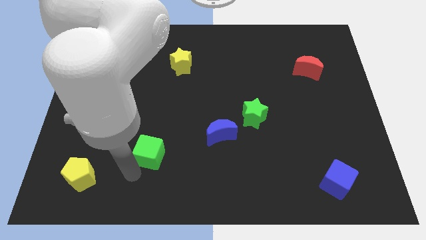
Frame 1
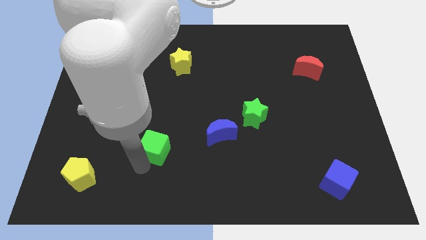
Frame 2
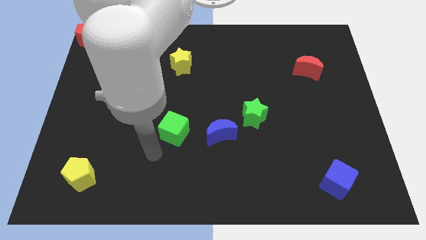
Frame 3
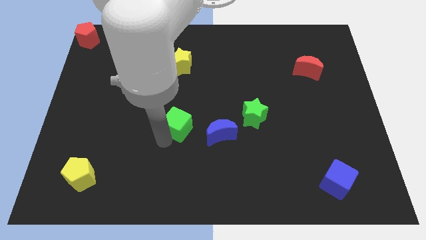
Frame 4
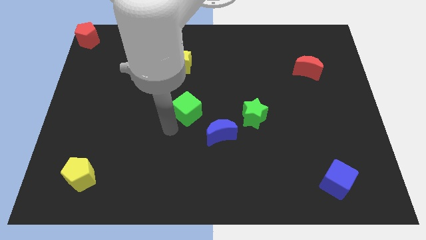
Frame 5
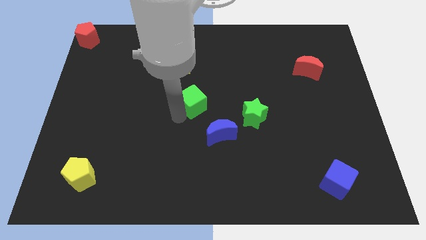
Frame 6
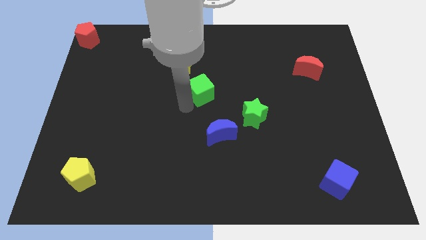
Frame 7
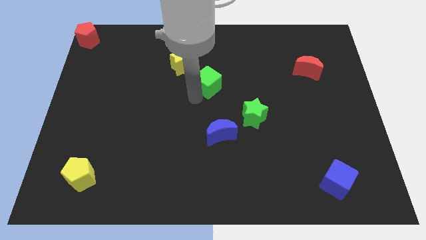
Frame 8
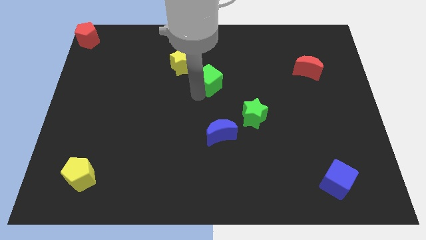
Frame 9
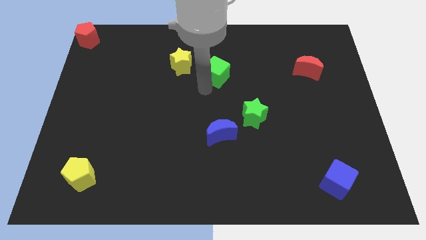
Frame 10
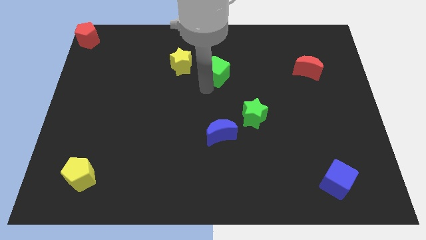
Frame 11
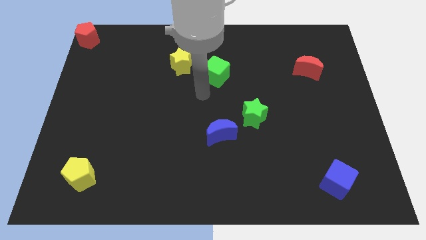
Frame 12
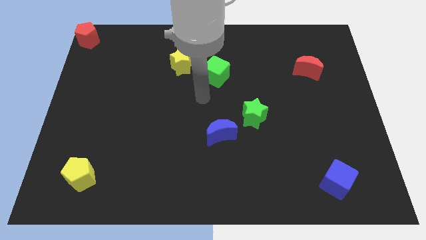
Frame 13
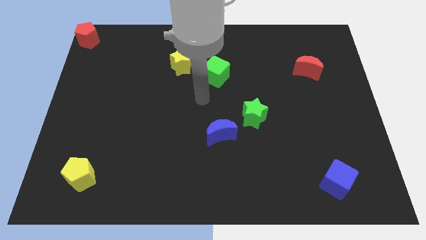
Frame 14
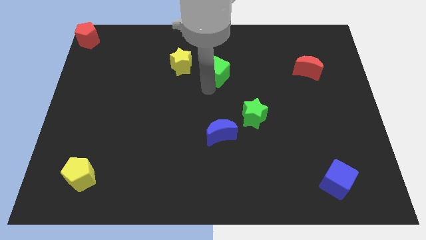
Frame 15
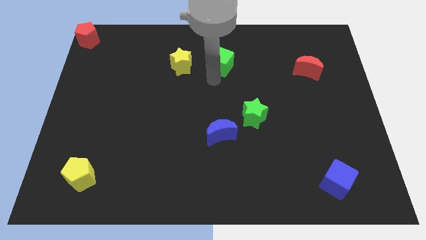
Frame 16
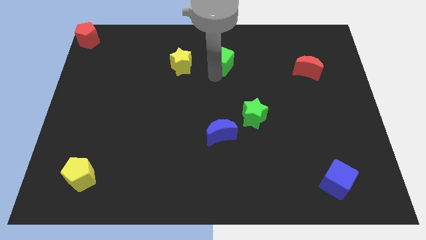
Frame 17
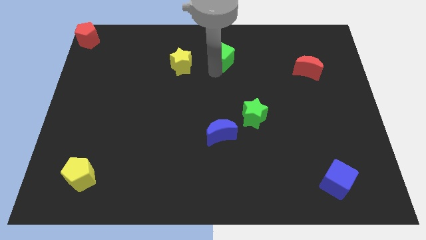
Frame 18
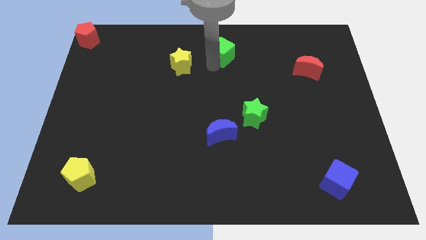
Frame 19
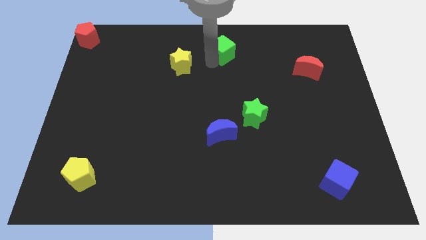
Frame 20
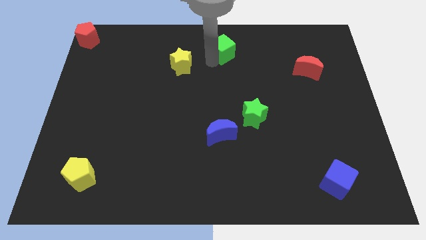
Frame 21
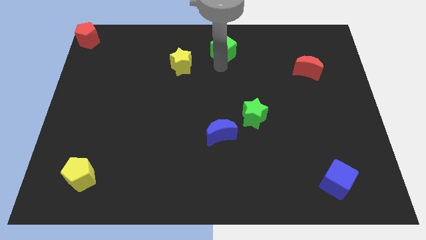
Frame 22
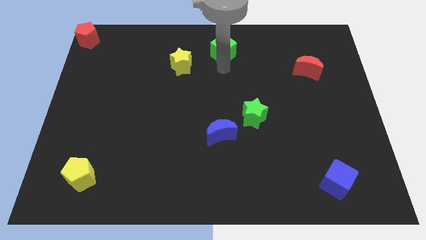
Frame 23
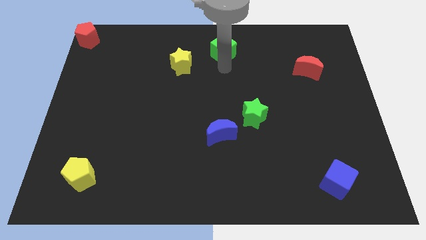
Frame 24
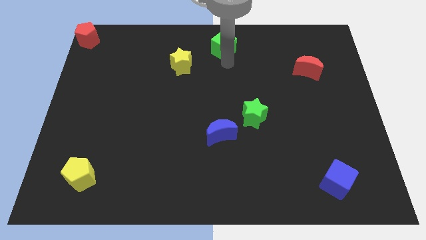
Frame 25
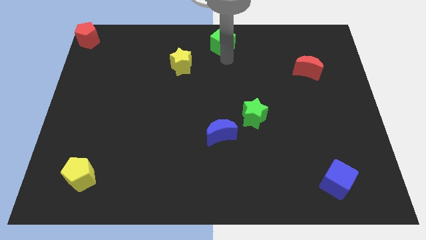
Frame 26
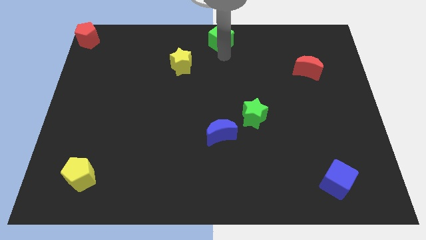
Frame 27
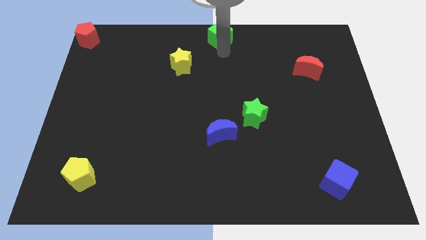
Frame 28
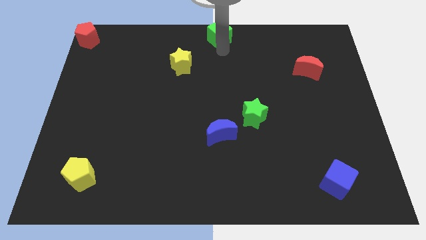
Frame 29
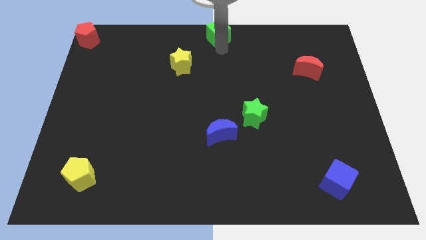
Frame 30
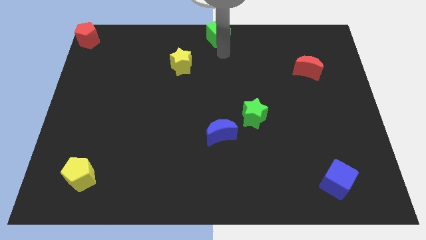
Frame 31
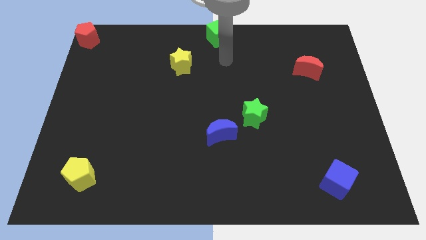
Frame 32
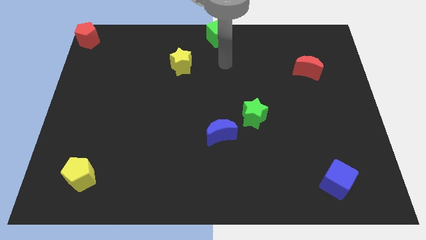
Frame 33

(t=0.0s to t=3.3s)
place the green cube at the top center of the board

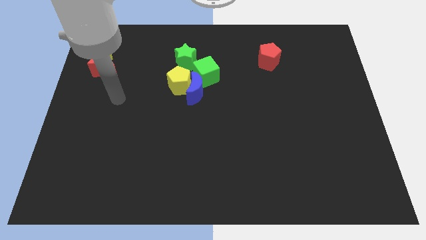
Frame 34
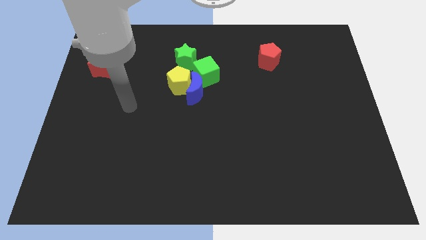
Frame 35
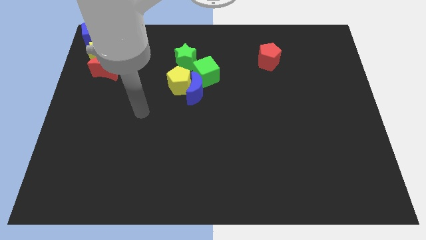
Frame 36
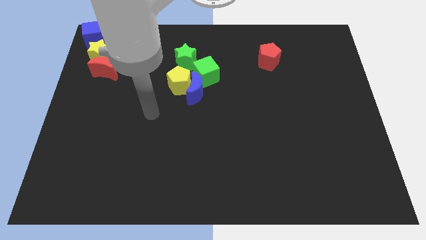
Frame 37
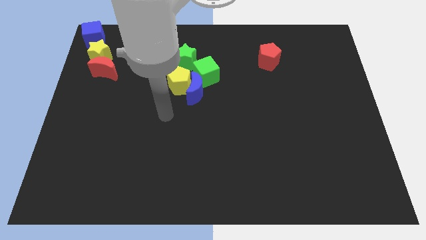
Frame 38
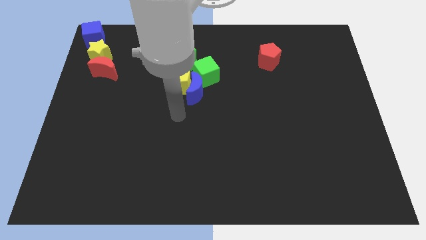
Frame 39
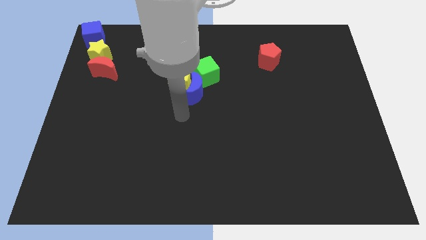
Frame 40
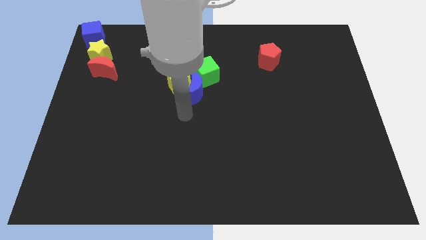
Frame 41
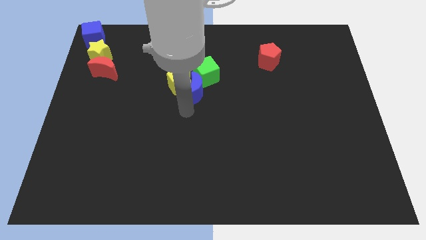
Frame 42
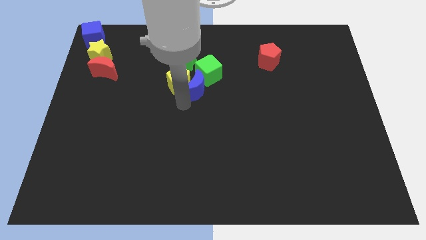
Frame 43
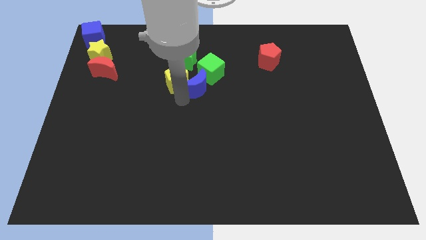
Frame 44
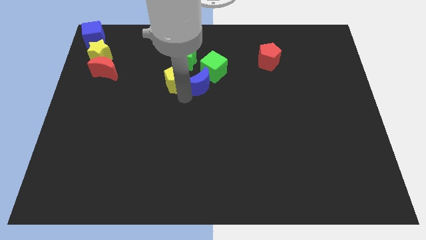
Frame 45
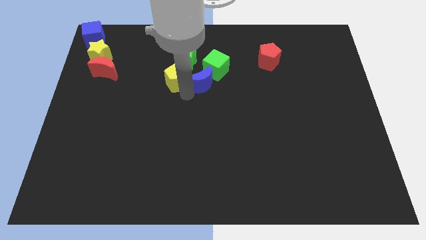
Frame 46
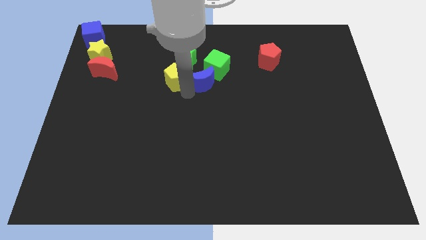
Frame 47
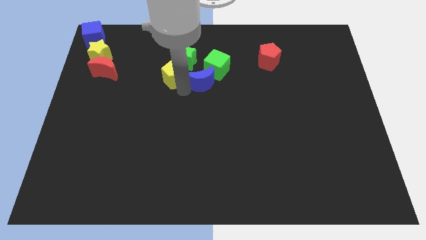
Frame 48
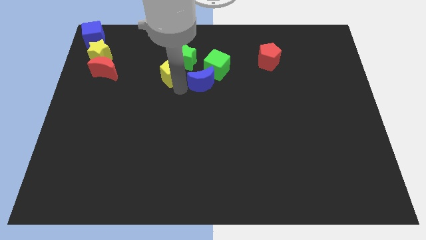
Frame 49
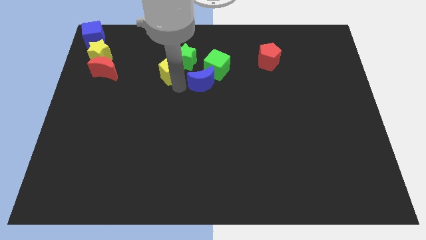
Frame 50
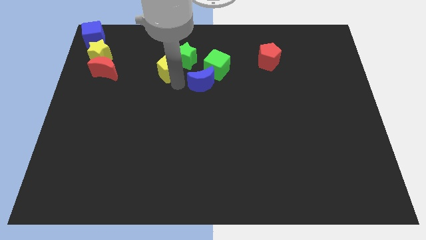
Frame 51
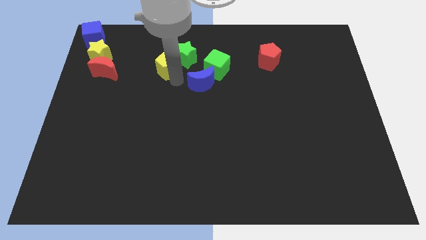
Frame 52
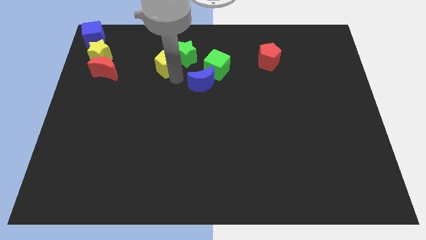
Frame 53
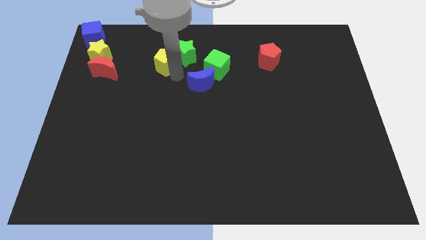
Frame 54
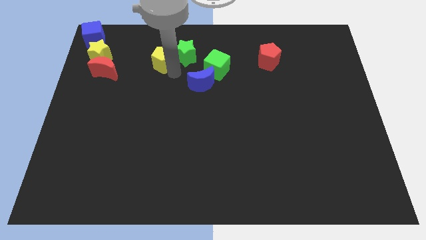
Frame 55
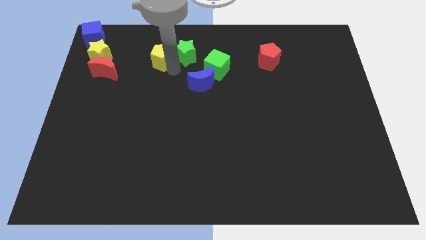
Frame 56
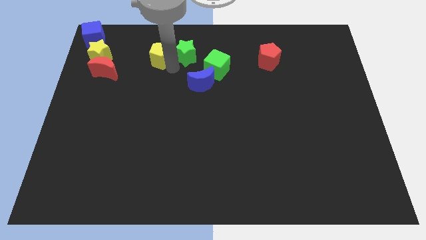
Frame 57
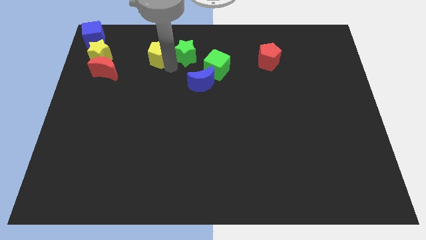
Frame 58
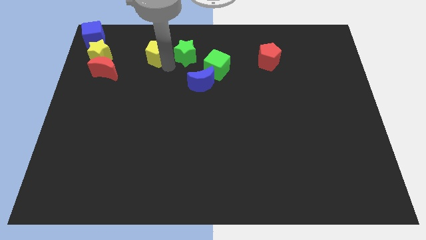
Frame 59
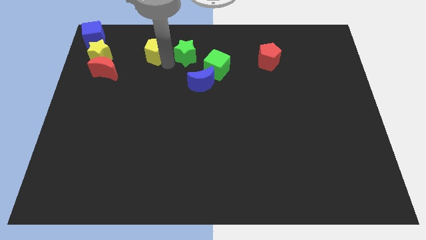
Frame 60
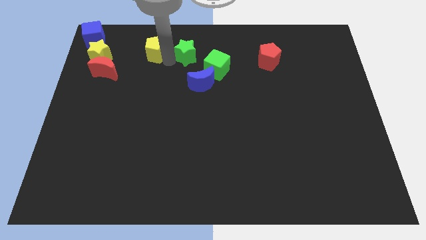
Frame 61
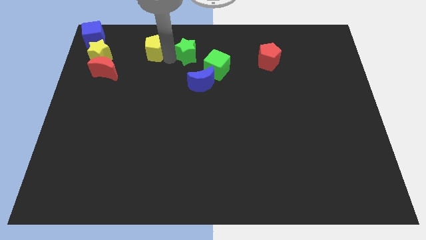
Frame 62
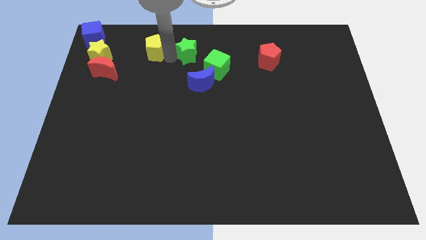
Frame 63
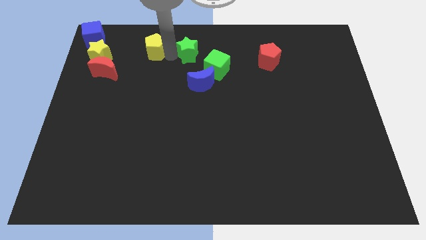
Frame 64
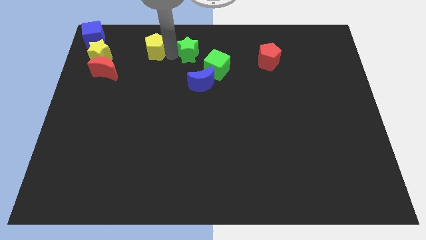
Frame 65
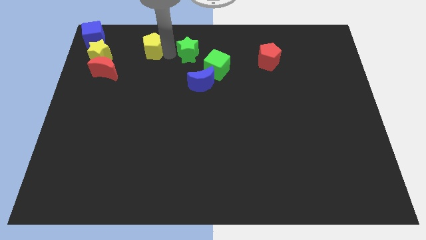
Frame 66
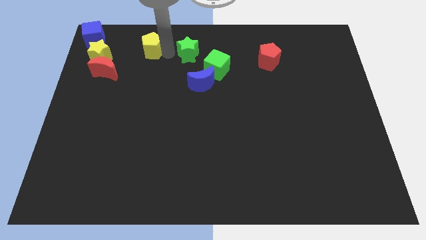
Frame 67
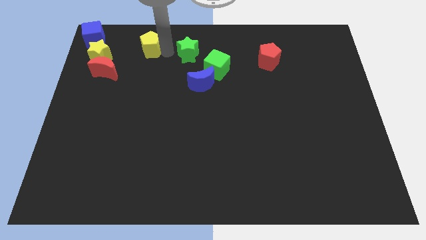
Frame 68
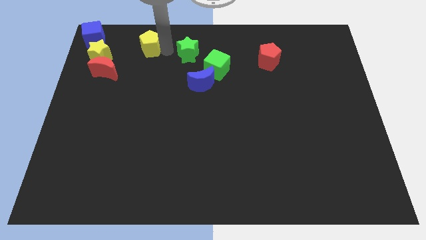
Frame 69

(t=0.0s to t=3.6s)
separate yellow pentagon from blue crescent

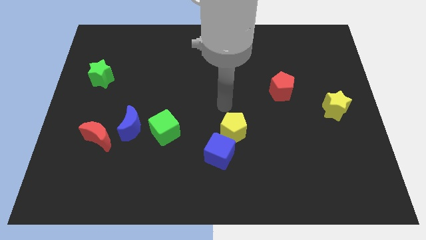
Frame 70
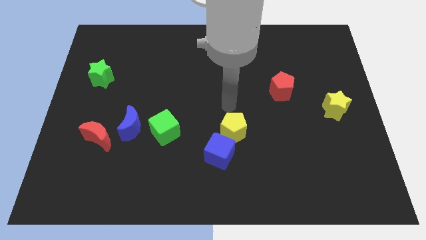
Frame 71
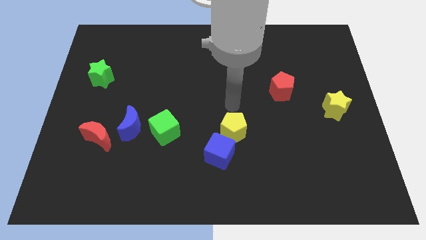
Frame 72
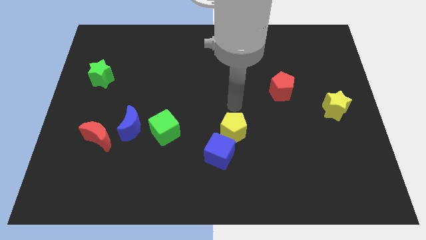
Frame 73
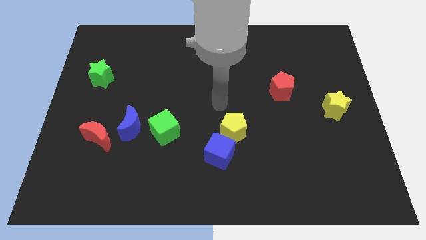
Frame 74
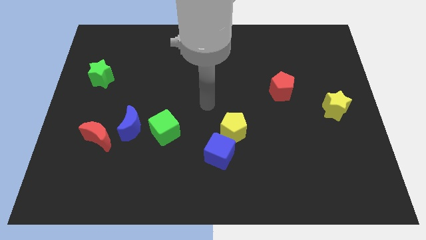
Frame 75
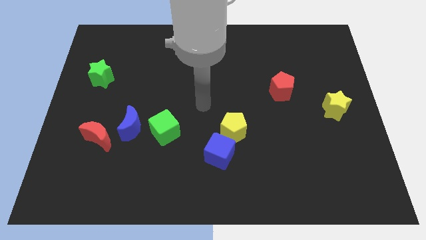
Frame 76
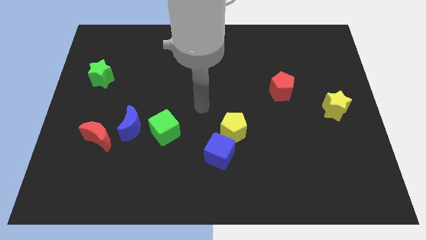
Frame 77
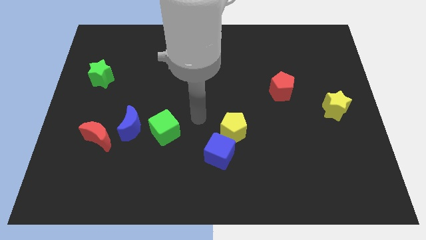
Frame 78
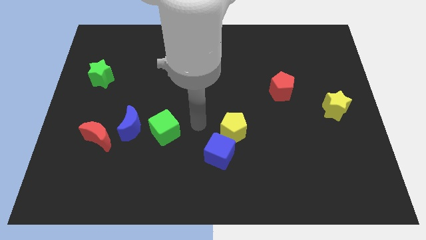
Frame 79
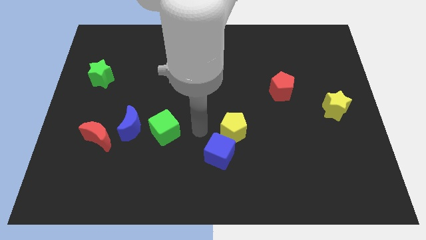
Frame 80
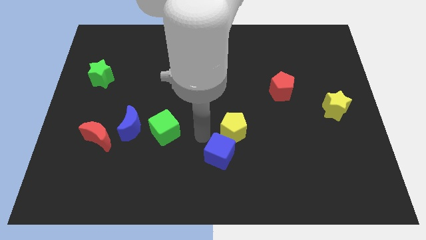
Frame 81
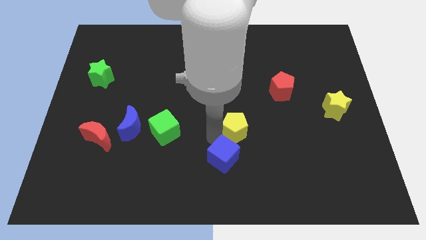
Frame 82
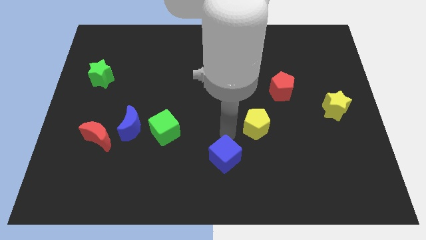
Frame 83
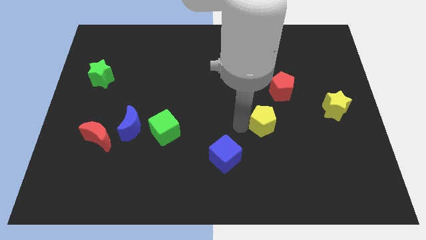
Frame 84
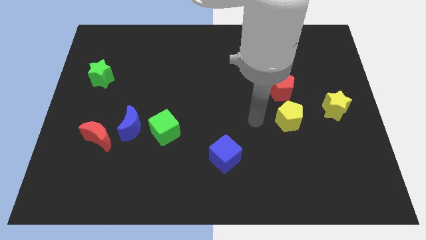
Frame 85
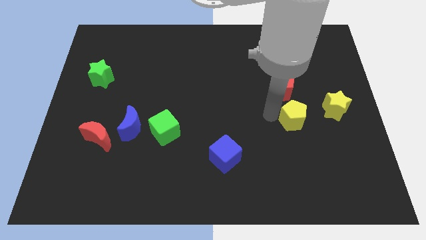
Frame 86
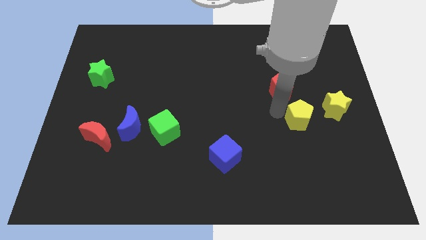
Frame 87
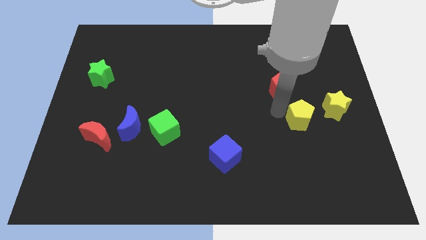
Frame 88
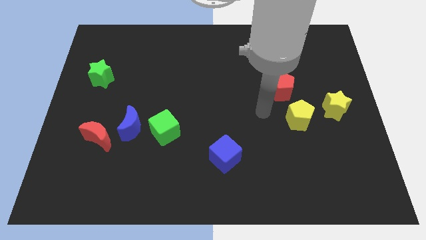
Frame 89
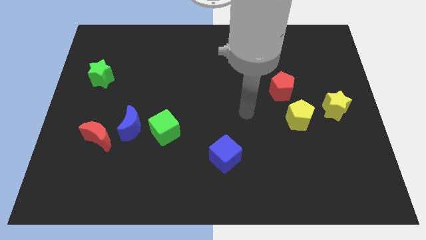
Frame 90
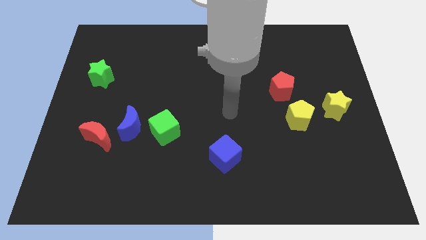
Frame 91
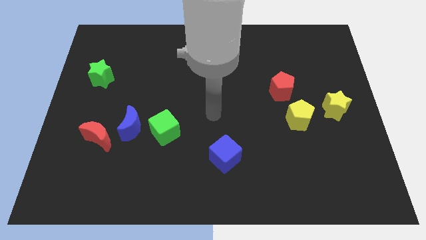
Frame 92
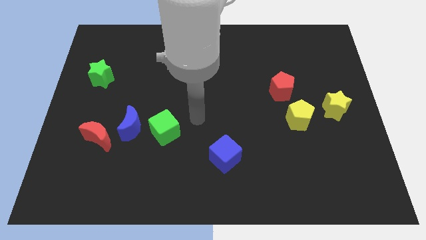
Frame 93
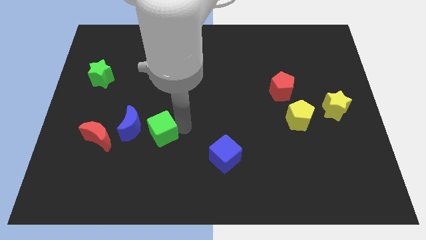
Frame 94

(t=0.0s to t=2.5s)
push the yellow pentagon to the left of the yellow star
